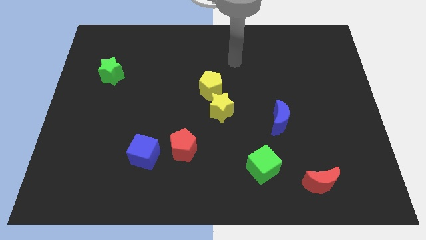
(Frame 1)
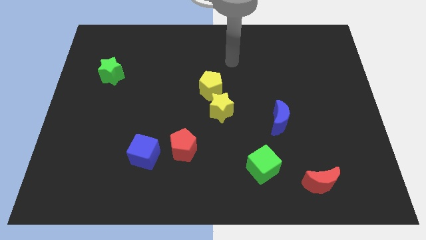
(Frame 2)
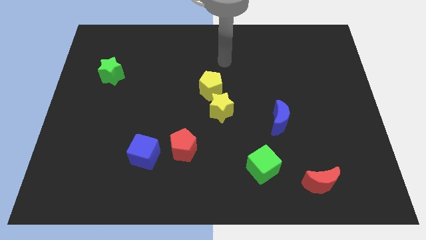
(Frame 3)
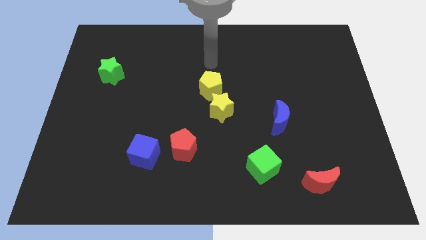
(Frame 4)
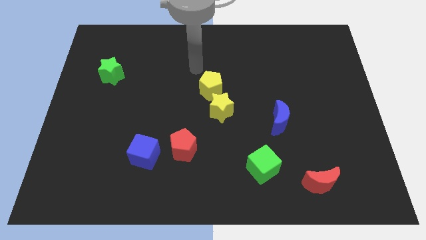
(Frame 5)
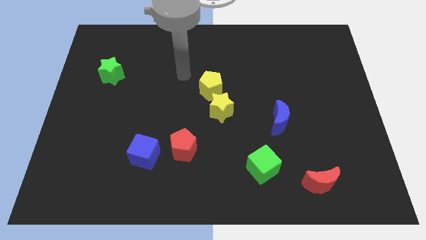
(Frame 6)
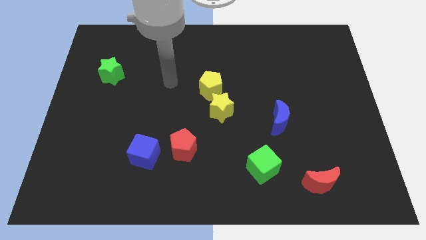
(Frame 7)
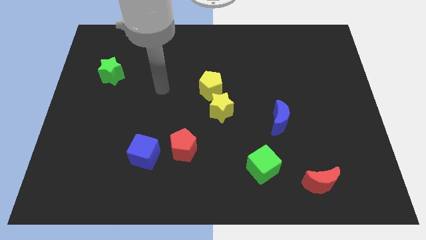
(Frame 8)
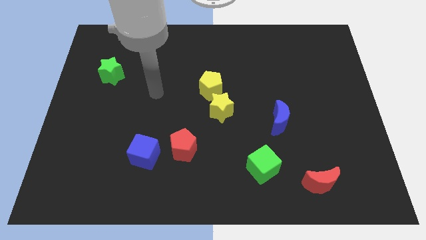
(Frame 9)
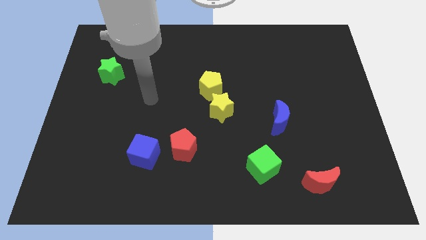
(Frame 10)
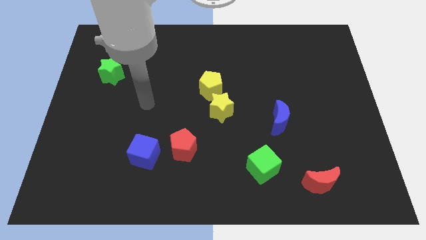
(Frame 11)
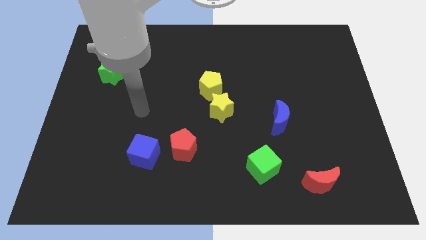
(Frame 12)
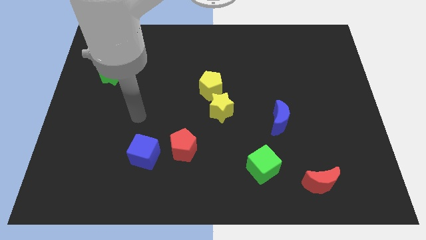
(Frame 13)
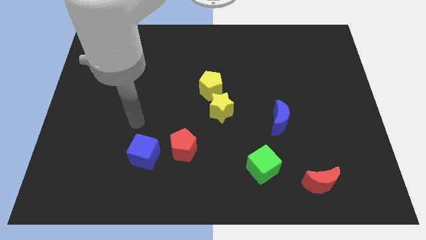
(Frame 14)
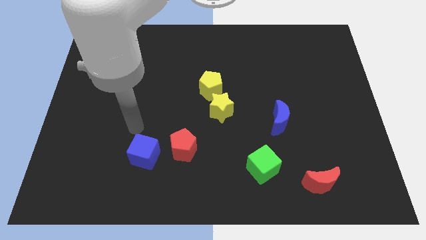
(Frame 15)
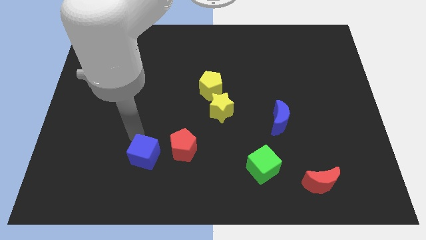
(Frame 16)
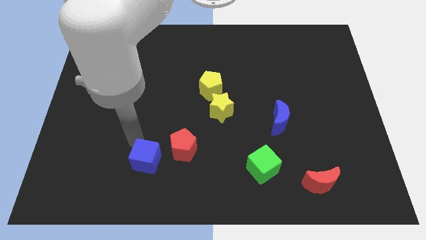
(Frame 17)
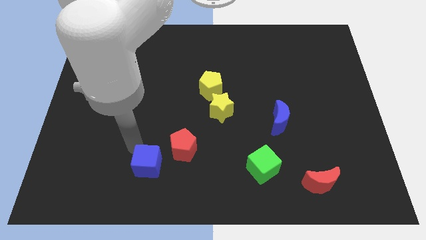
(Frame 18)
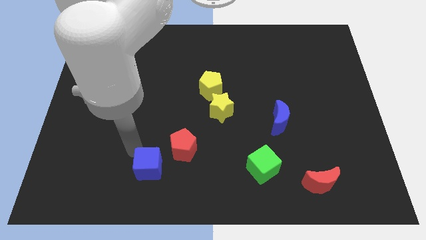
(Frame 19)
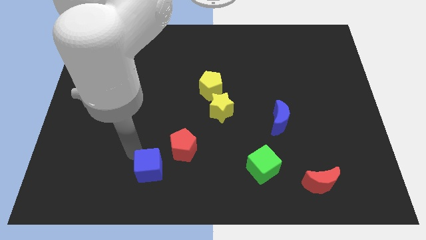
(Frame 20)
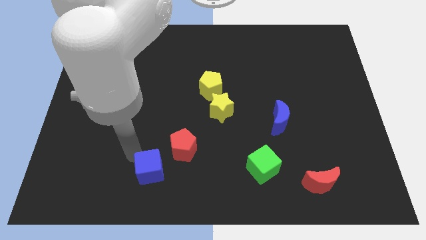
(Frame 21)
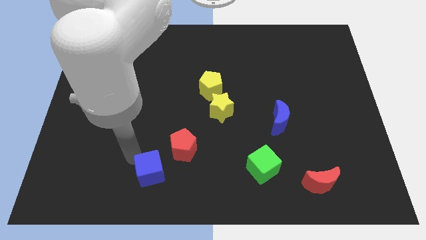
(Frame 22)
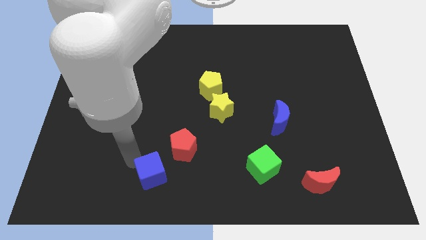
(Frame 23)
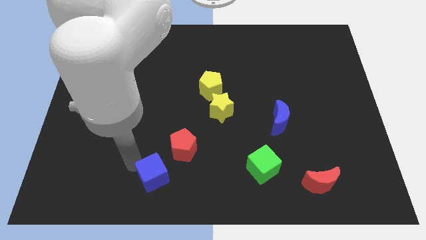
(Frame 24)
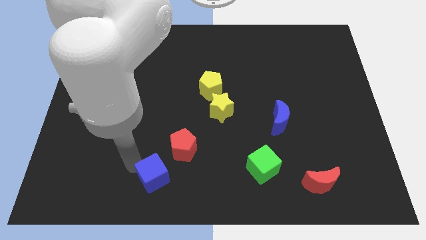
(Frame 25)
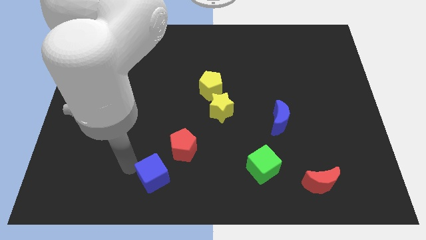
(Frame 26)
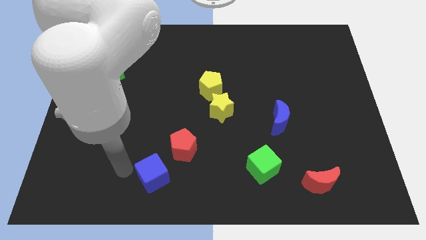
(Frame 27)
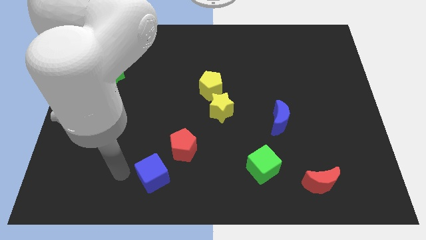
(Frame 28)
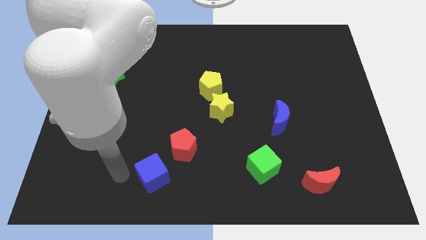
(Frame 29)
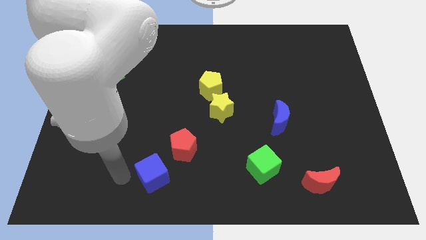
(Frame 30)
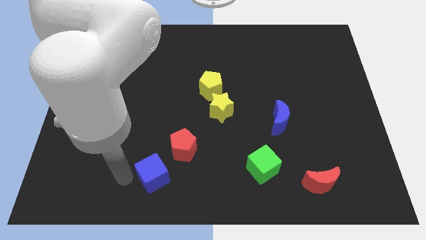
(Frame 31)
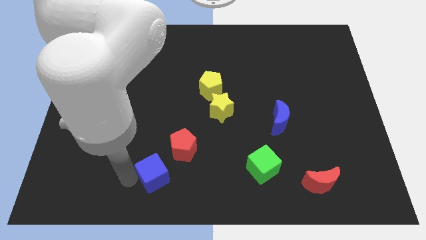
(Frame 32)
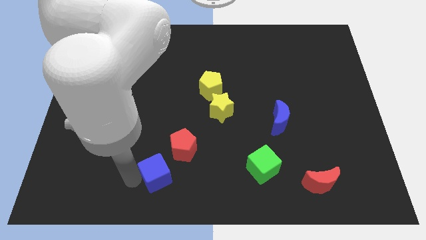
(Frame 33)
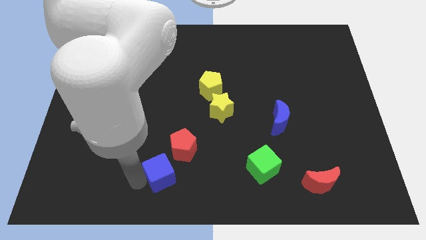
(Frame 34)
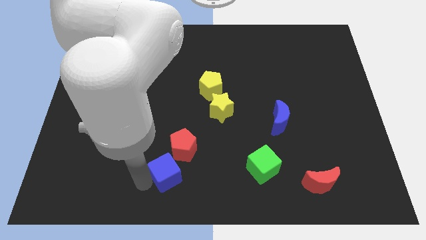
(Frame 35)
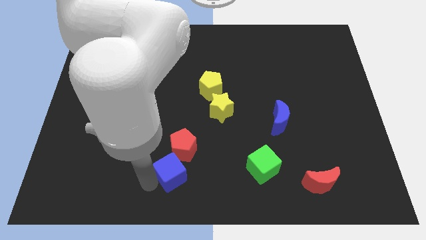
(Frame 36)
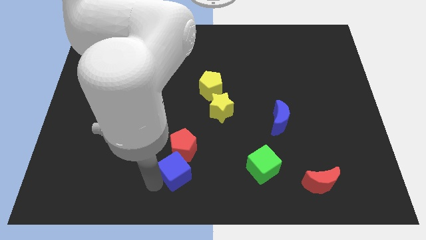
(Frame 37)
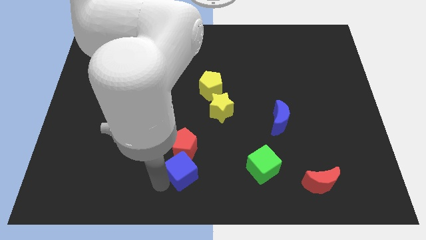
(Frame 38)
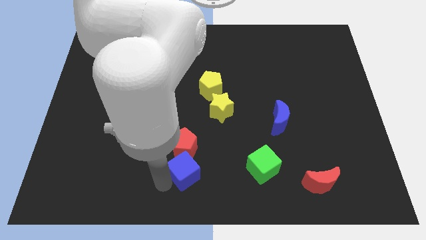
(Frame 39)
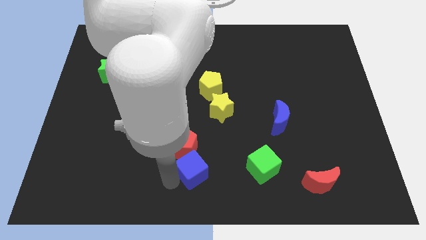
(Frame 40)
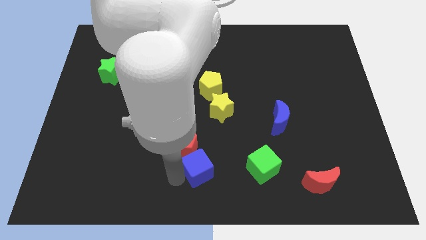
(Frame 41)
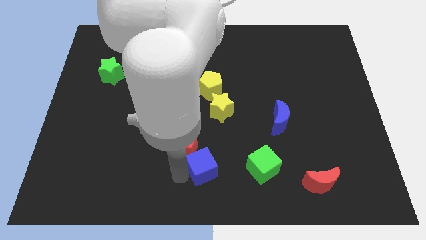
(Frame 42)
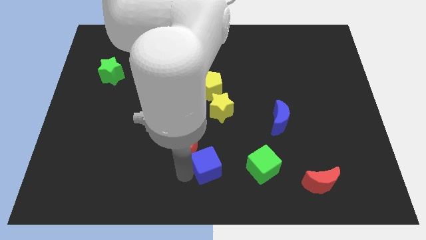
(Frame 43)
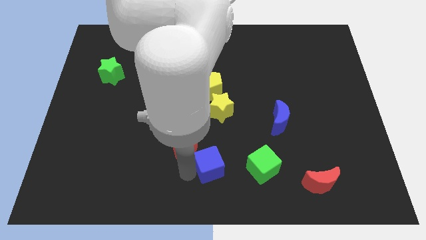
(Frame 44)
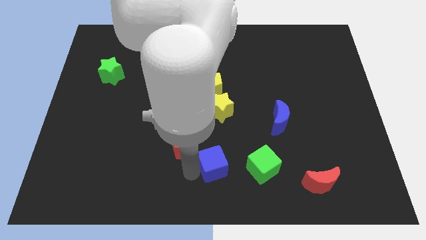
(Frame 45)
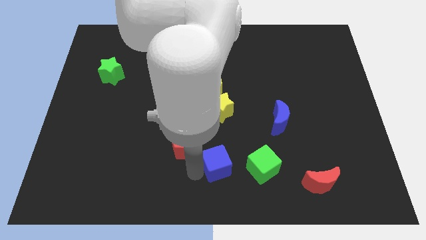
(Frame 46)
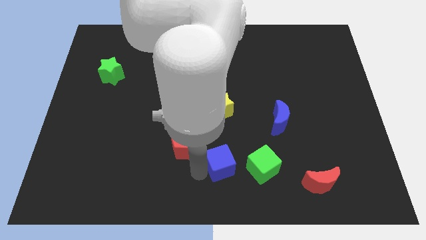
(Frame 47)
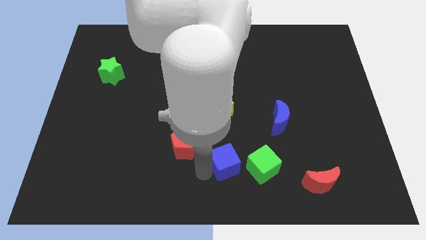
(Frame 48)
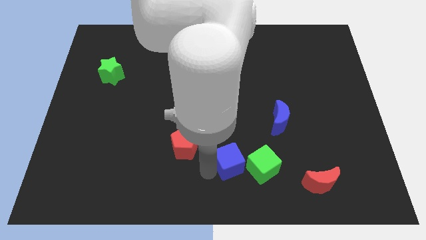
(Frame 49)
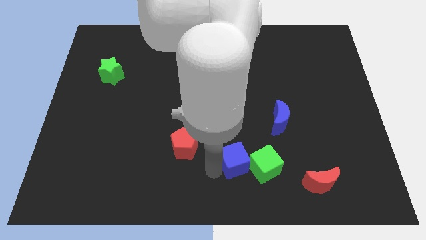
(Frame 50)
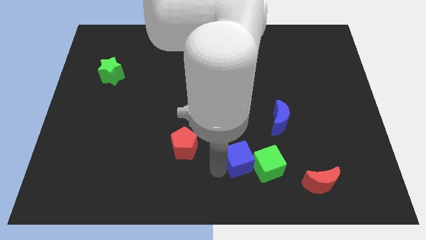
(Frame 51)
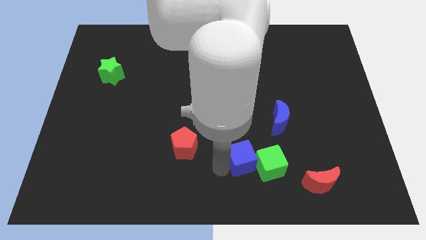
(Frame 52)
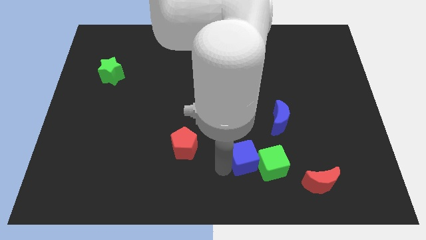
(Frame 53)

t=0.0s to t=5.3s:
push the blue cube towards the green cube

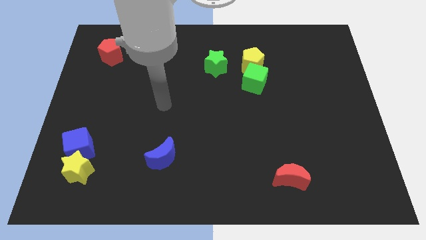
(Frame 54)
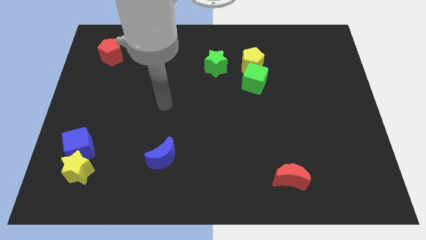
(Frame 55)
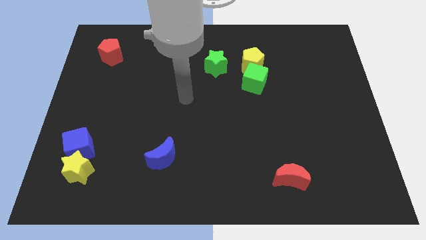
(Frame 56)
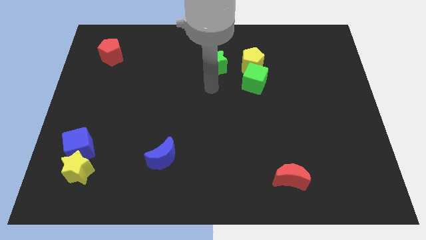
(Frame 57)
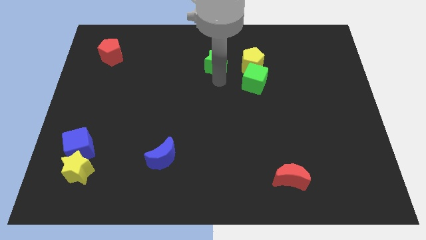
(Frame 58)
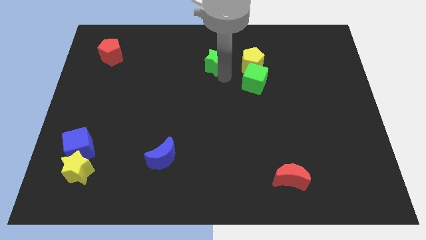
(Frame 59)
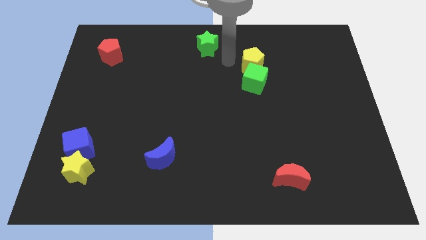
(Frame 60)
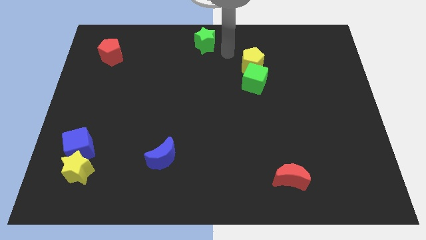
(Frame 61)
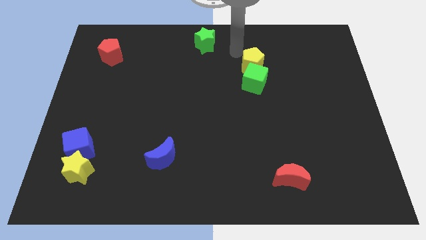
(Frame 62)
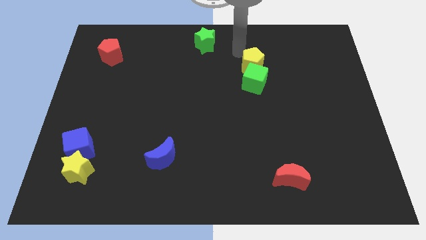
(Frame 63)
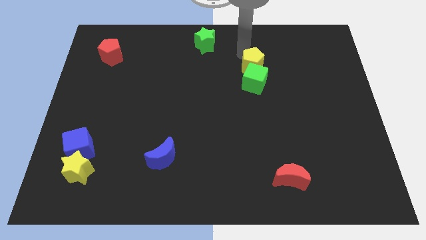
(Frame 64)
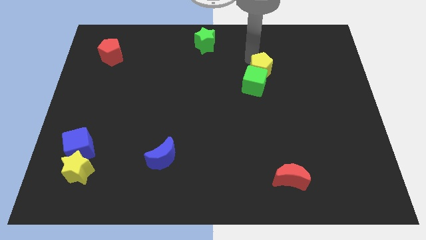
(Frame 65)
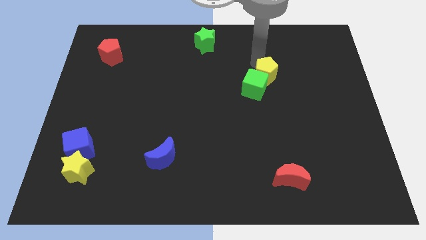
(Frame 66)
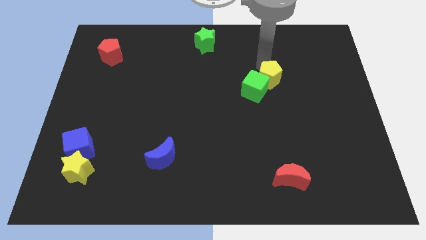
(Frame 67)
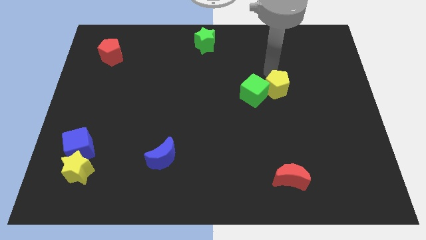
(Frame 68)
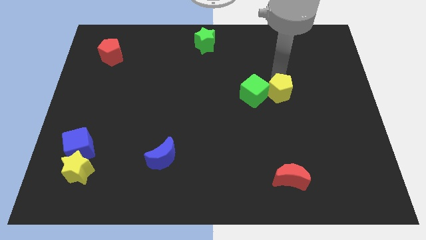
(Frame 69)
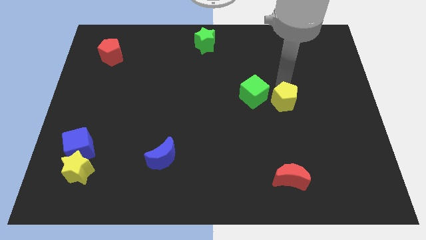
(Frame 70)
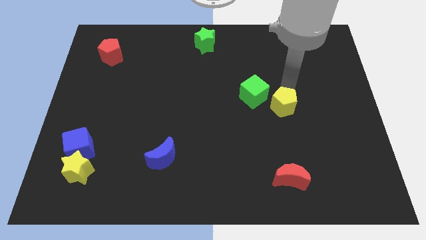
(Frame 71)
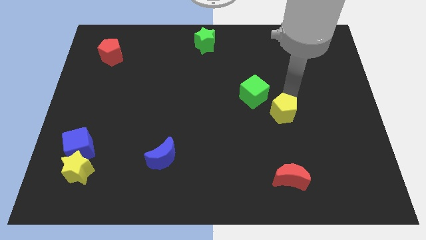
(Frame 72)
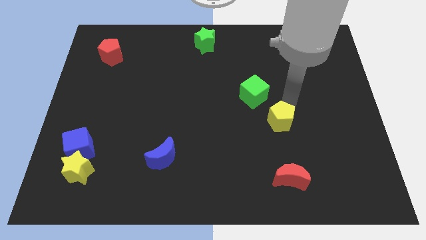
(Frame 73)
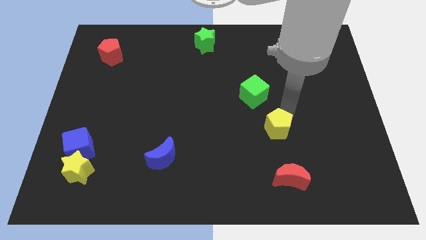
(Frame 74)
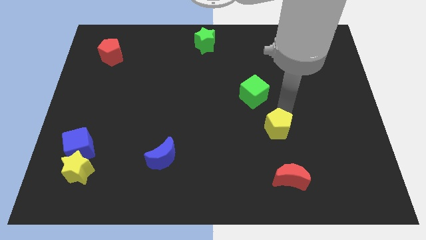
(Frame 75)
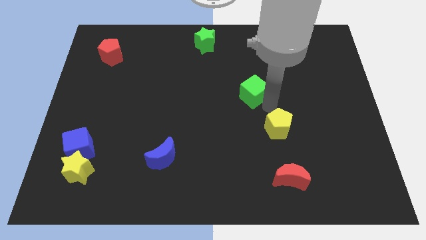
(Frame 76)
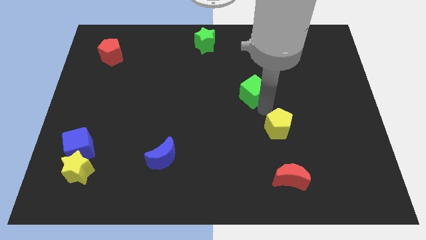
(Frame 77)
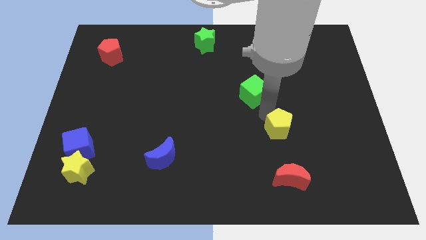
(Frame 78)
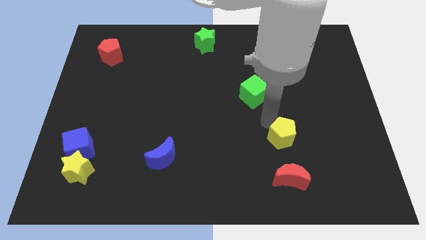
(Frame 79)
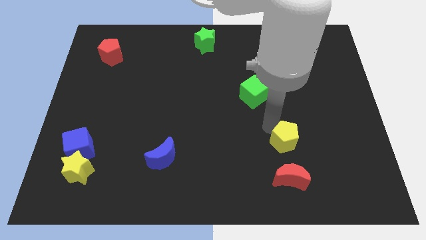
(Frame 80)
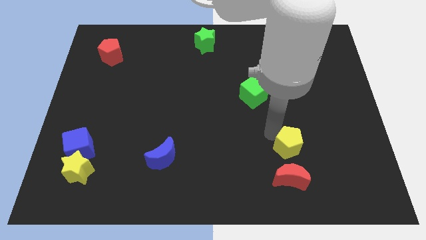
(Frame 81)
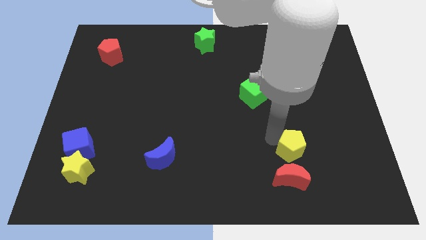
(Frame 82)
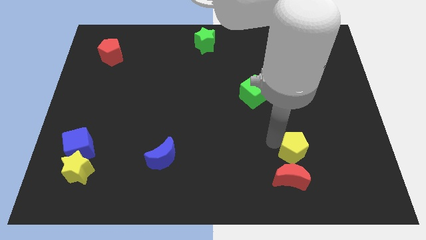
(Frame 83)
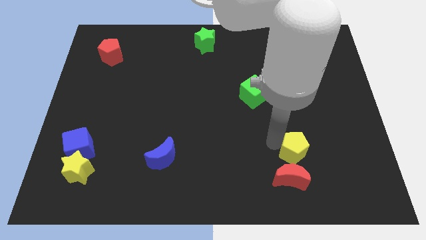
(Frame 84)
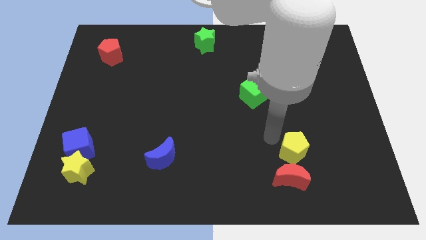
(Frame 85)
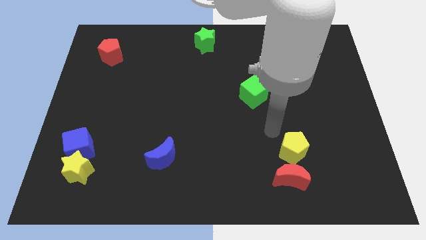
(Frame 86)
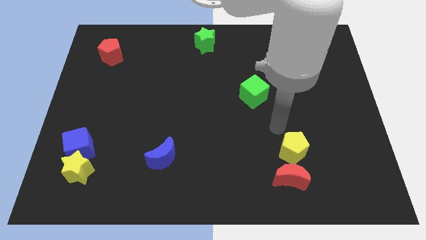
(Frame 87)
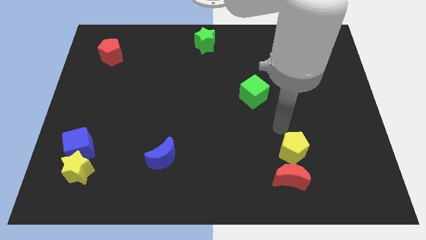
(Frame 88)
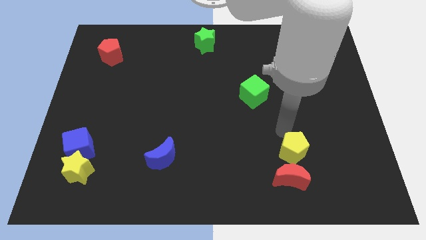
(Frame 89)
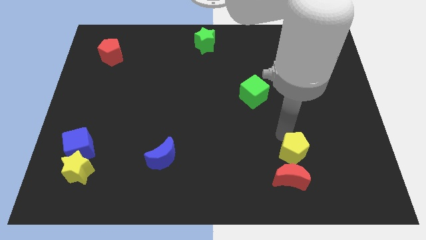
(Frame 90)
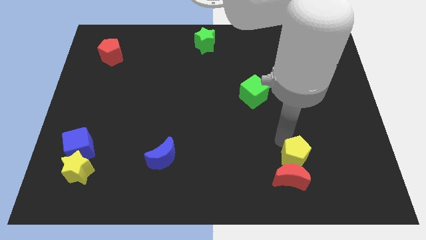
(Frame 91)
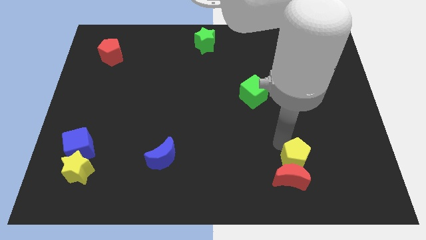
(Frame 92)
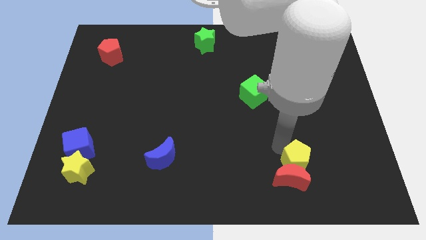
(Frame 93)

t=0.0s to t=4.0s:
slide the yellow pentagon next to the red moon
